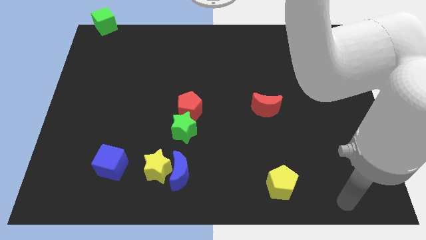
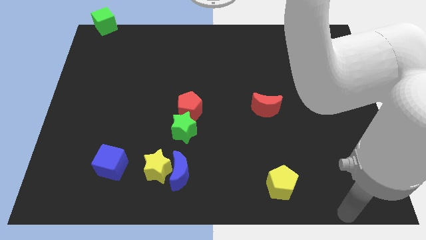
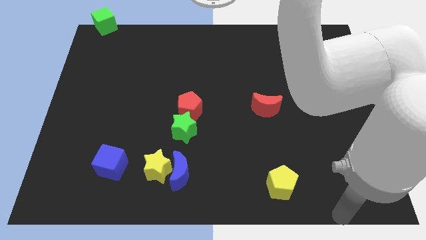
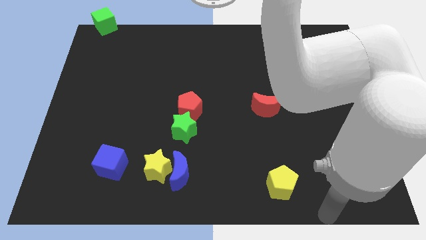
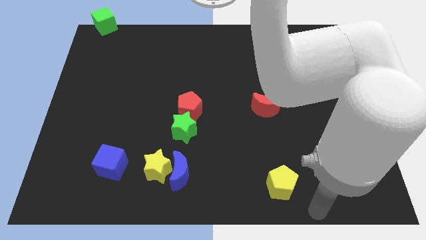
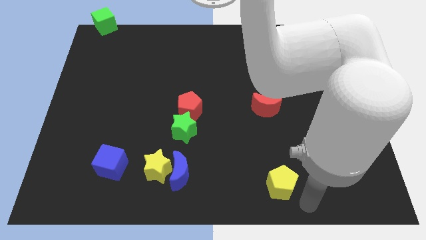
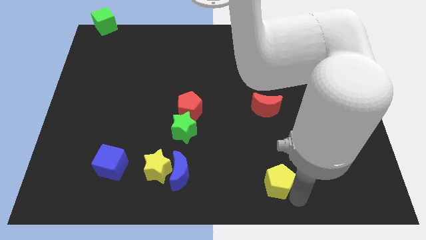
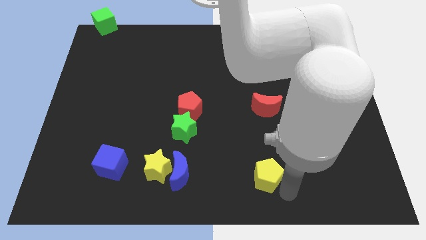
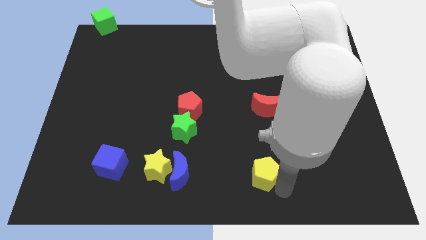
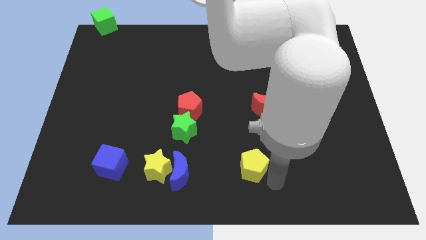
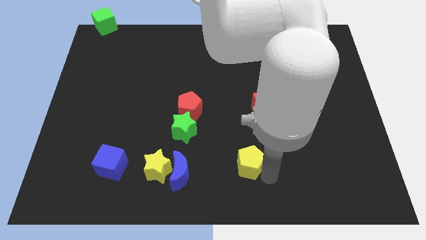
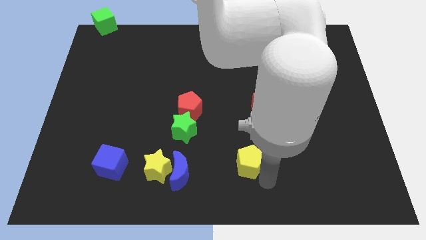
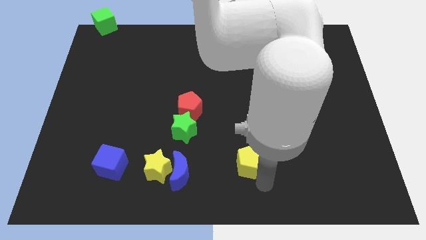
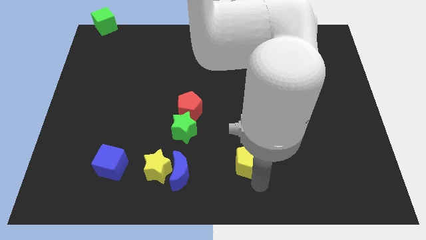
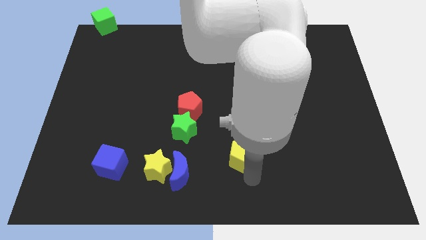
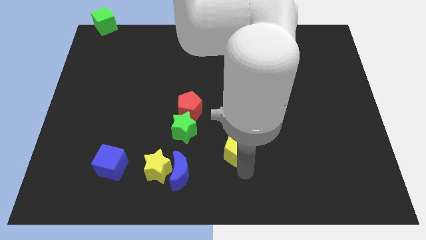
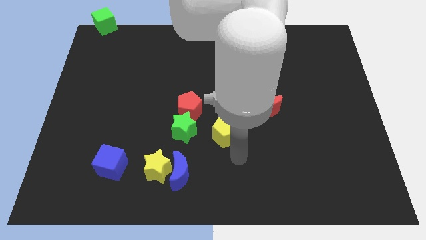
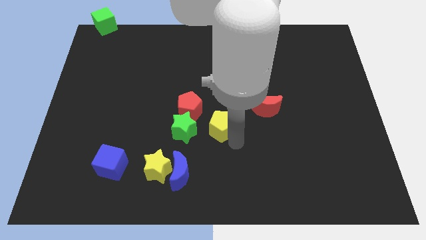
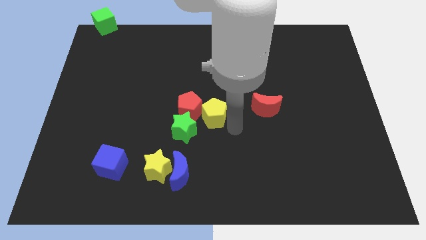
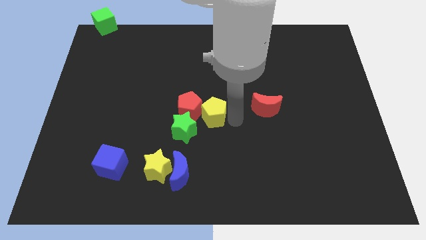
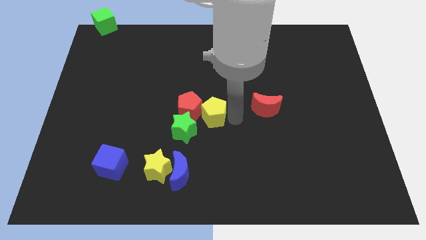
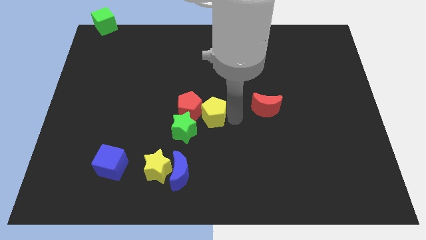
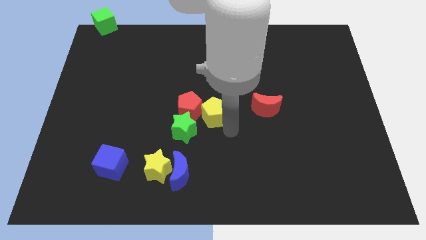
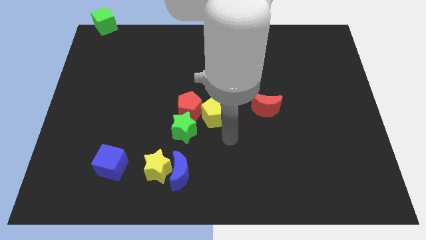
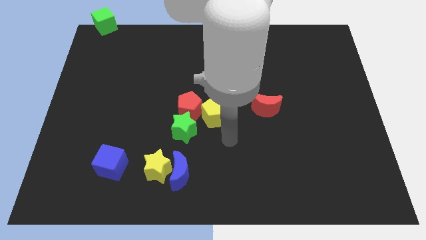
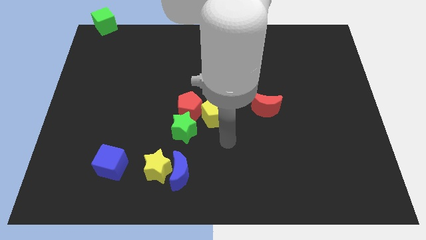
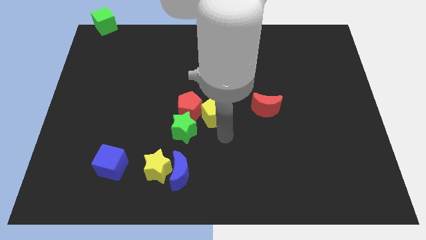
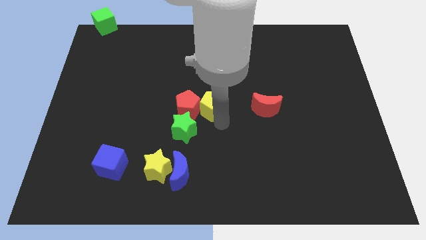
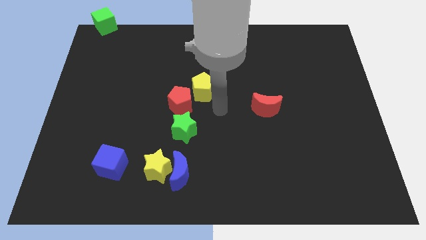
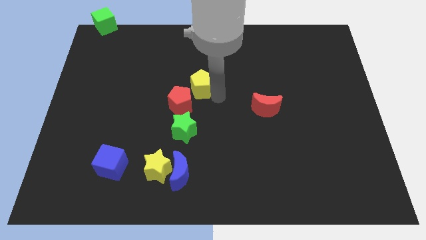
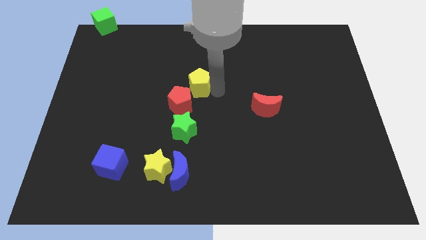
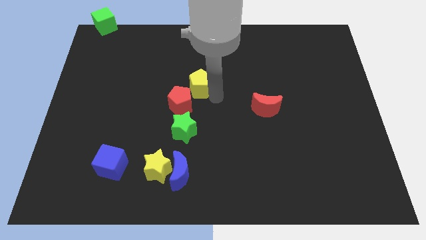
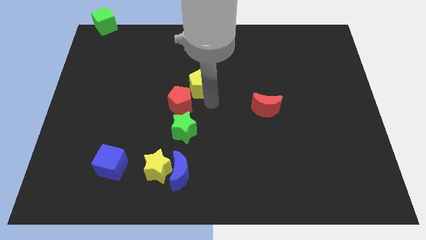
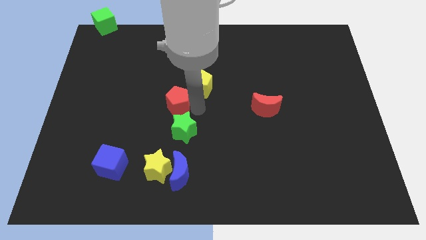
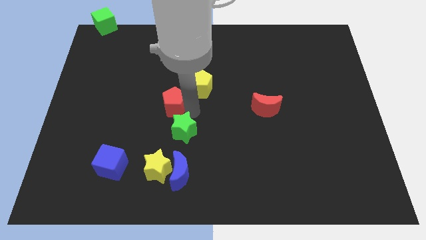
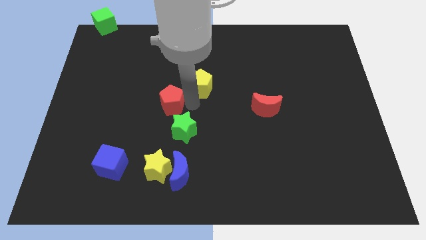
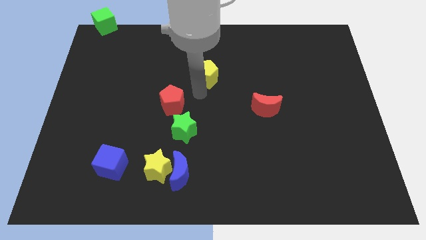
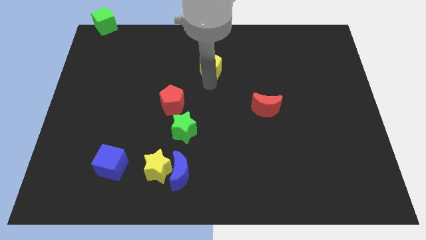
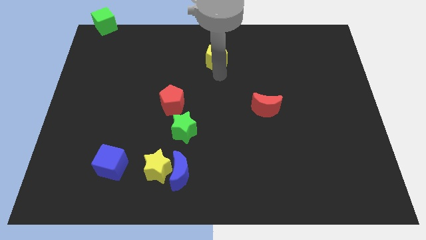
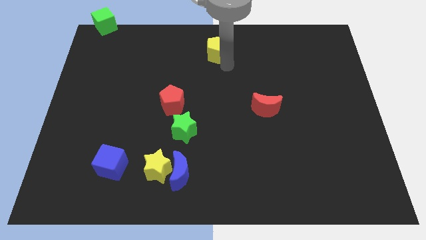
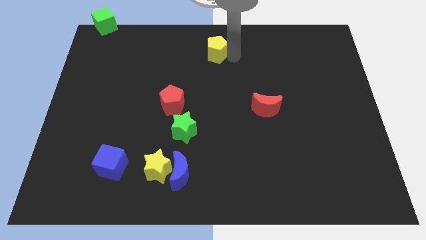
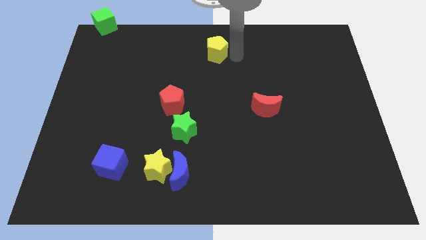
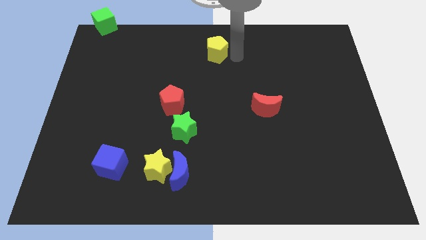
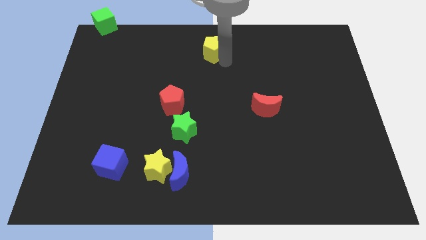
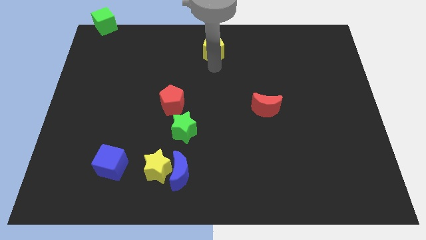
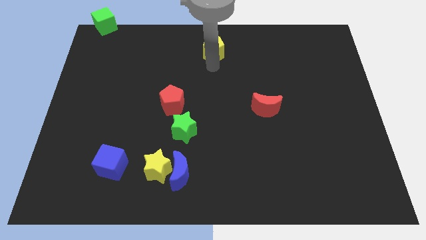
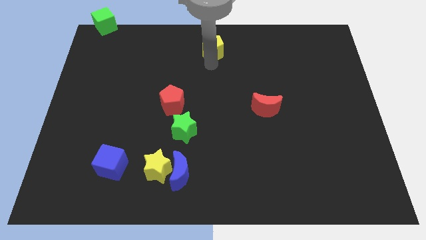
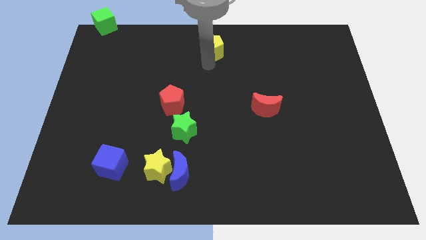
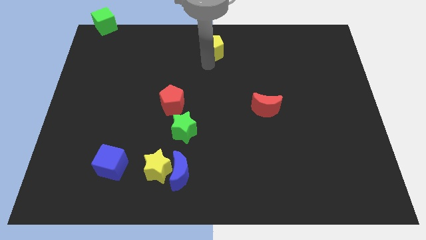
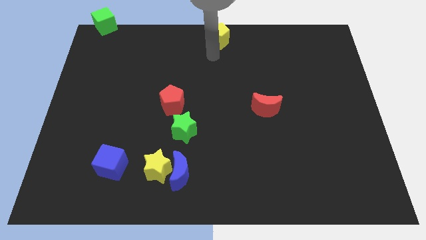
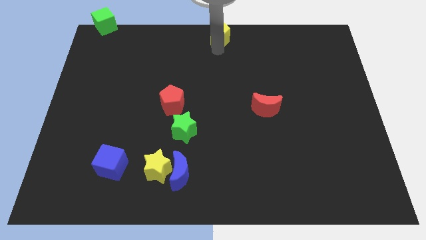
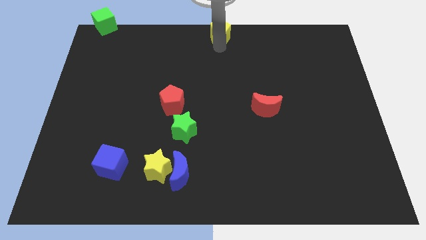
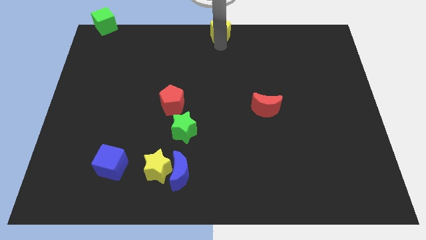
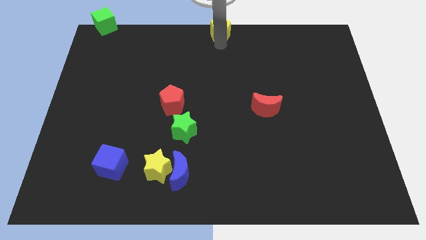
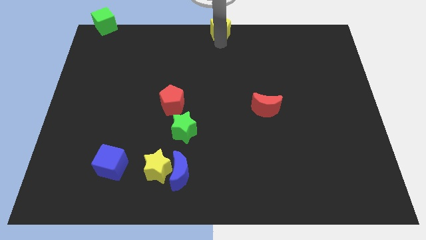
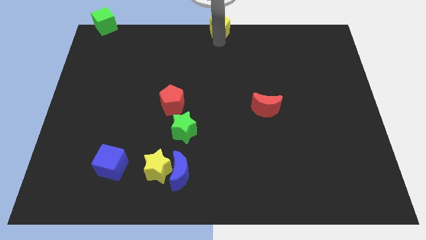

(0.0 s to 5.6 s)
push the yellow pentagon towards the top center

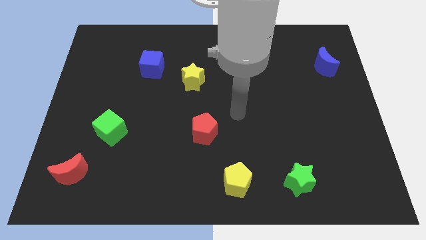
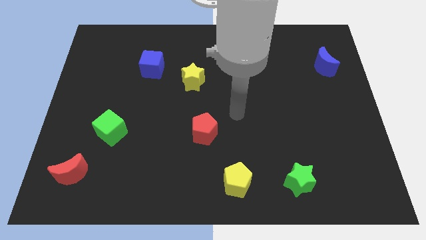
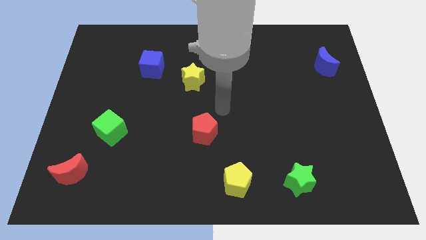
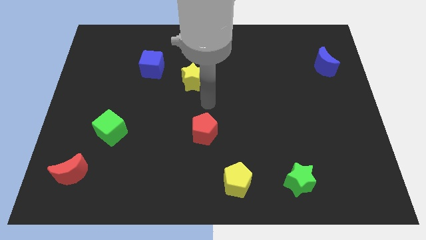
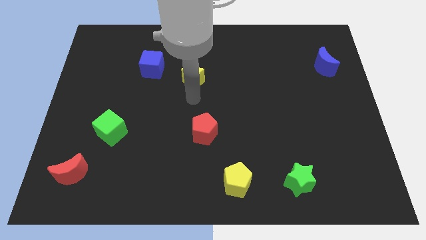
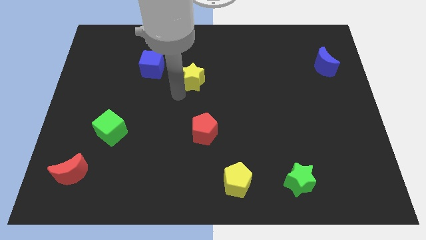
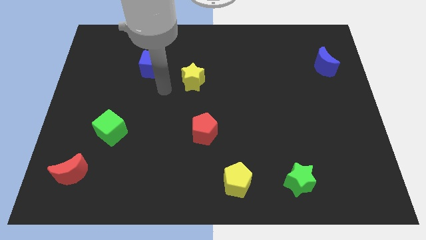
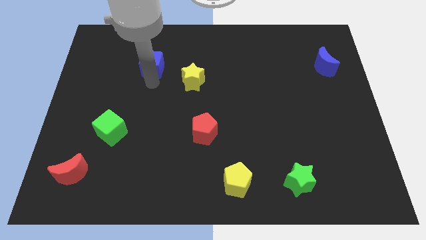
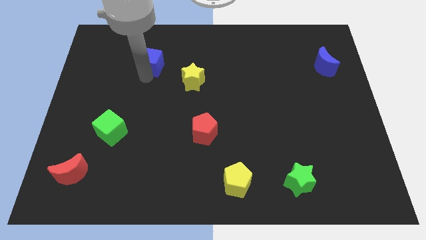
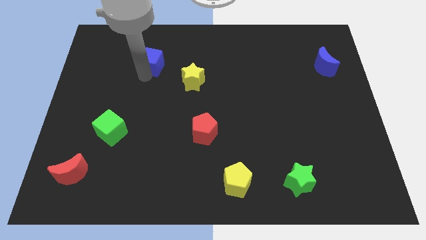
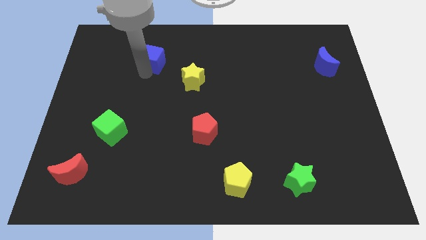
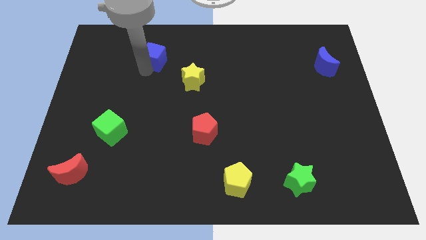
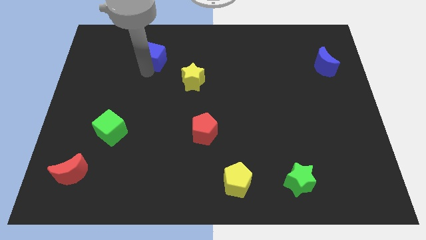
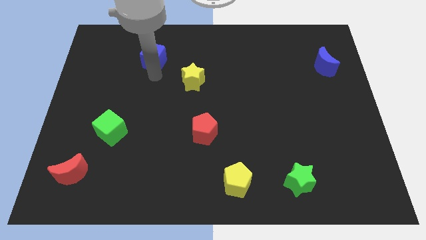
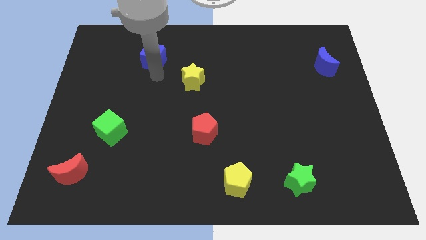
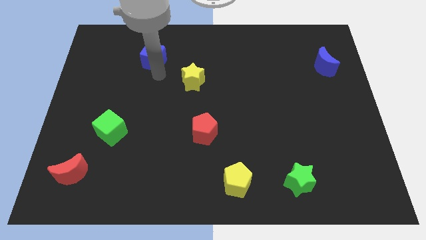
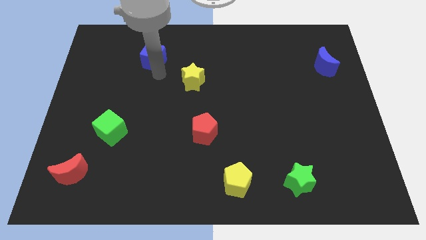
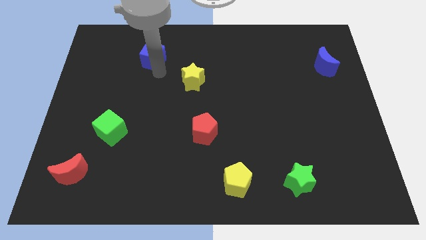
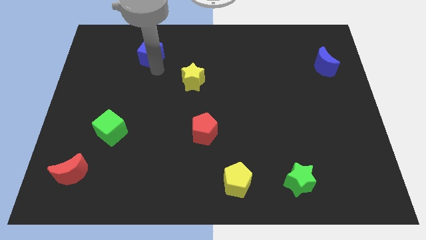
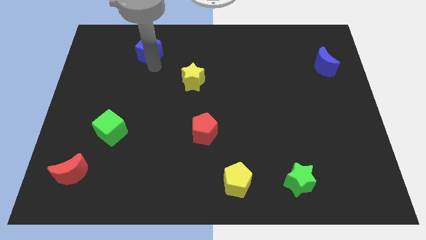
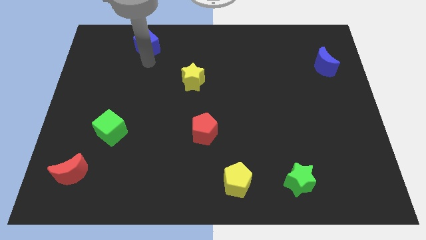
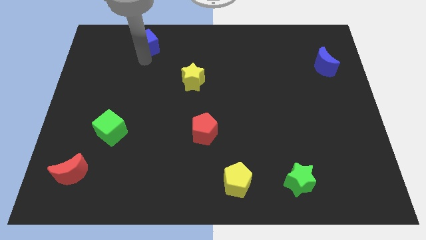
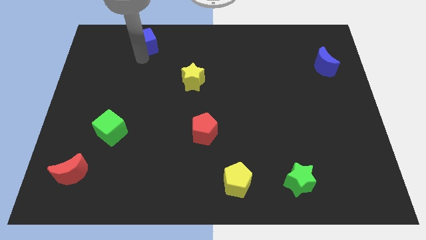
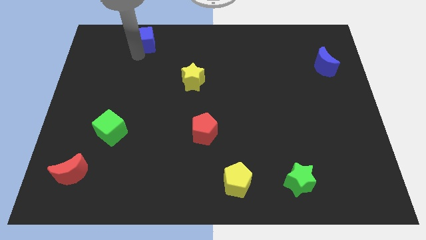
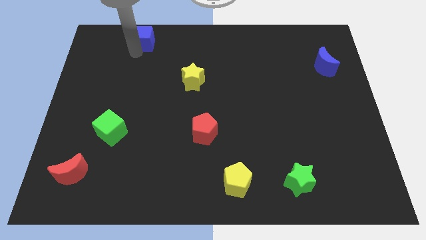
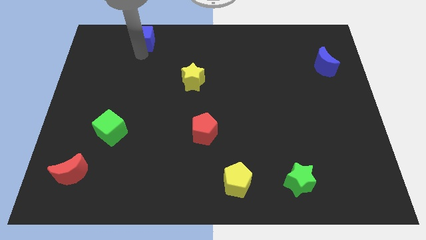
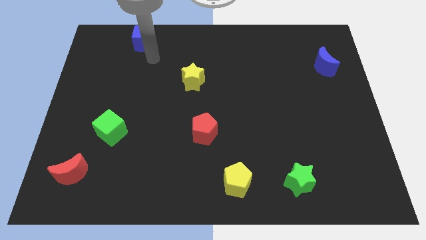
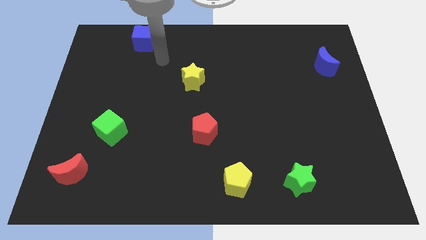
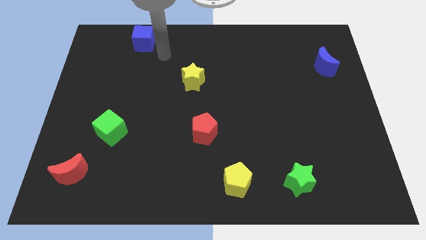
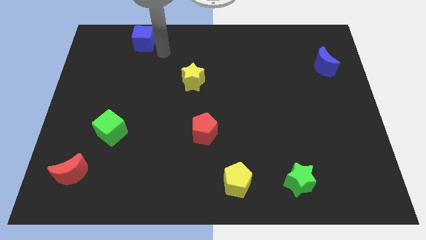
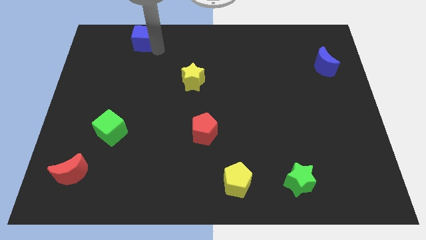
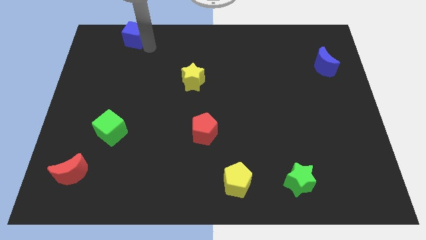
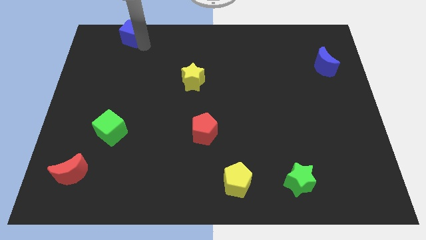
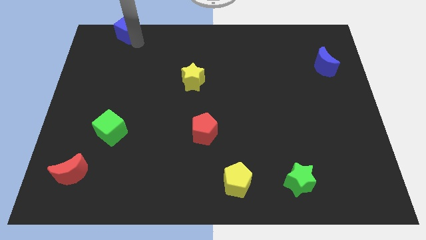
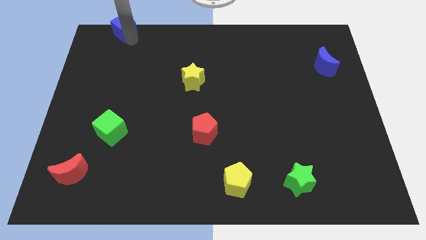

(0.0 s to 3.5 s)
place the blue cube to the top left
